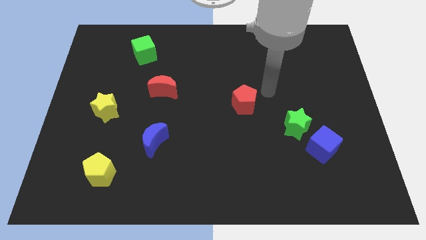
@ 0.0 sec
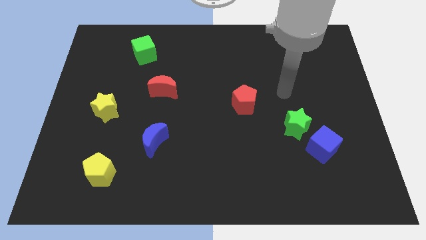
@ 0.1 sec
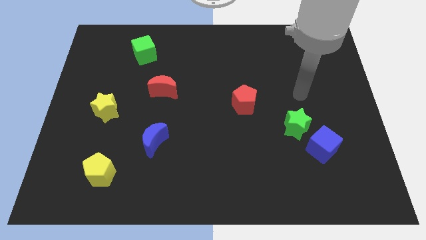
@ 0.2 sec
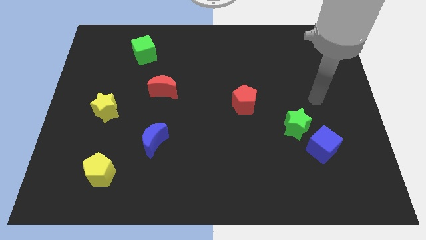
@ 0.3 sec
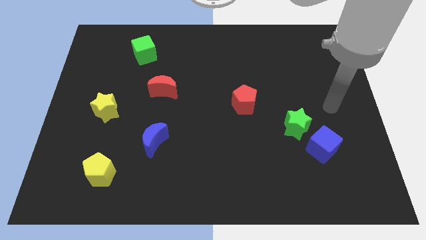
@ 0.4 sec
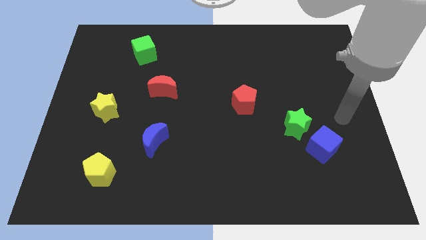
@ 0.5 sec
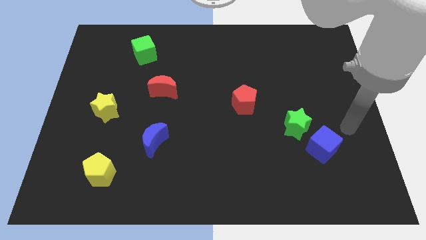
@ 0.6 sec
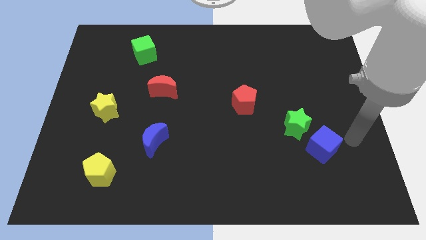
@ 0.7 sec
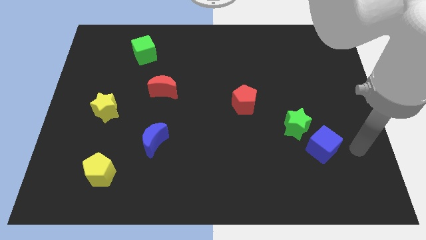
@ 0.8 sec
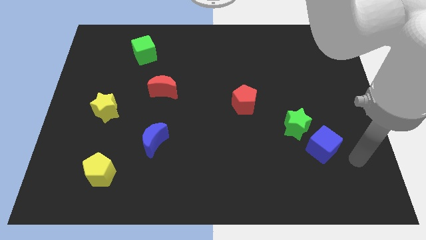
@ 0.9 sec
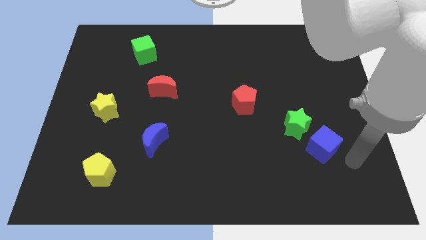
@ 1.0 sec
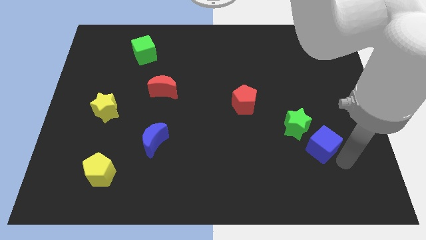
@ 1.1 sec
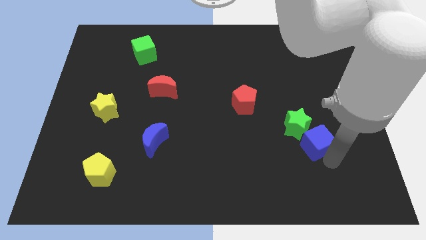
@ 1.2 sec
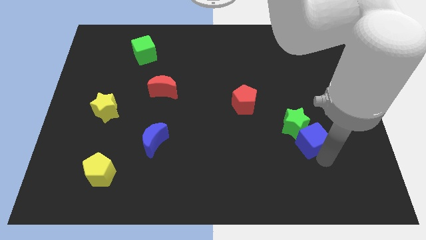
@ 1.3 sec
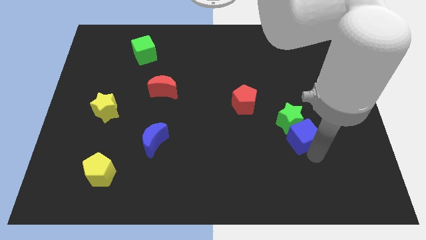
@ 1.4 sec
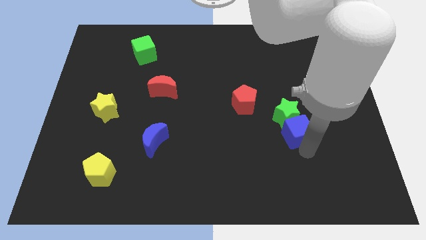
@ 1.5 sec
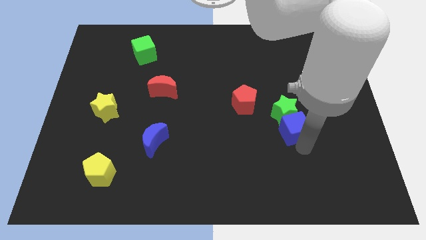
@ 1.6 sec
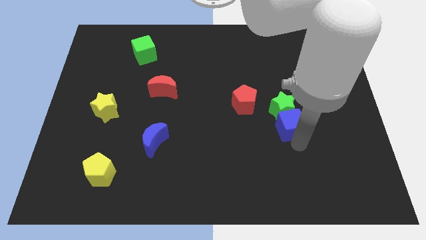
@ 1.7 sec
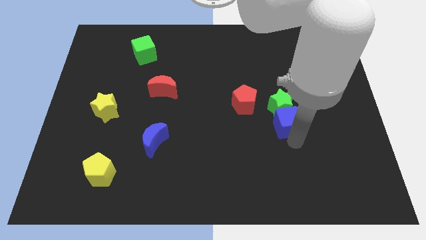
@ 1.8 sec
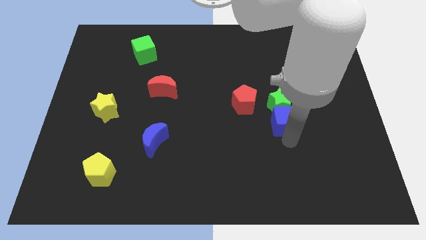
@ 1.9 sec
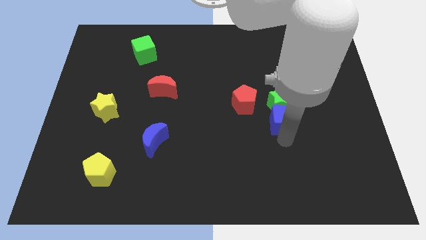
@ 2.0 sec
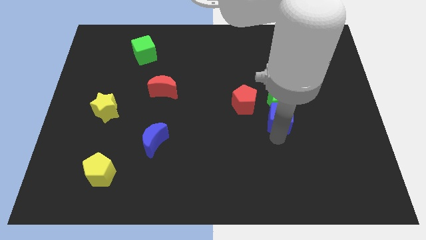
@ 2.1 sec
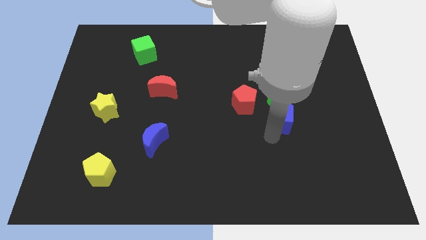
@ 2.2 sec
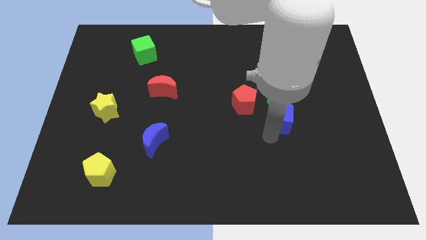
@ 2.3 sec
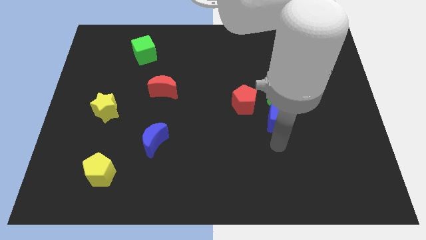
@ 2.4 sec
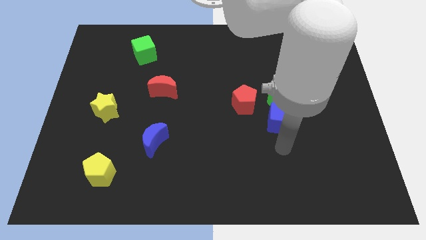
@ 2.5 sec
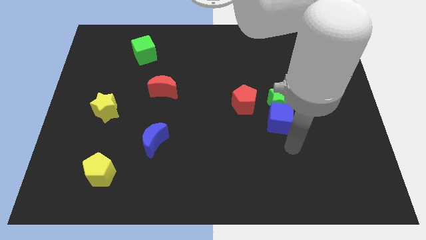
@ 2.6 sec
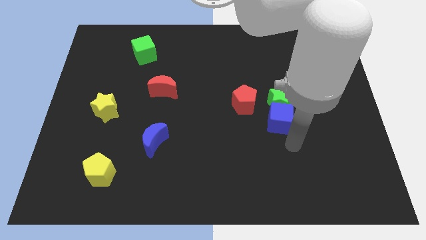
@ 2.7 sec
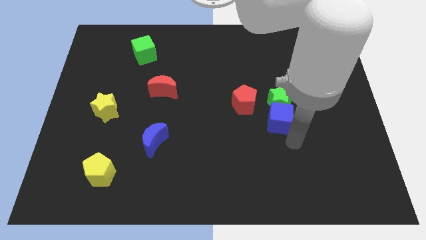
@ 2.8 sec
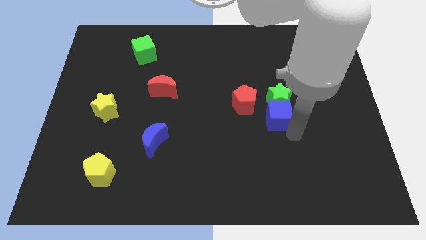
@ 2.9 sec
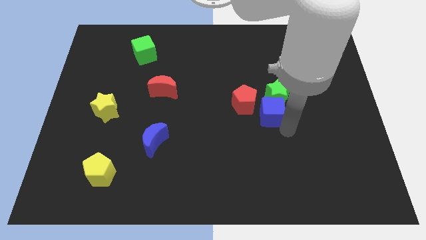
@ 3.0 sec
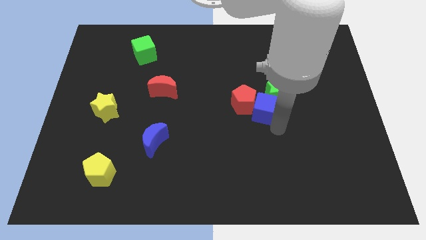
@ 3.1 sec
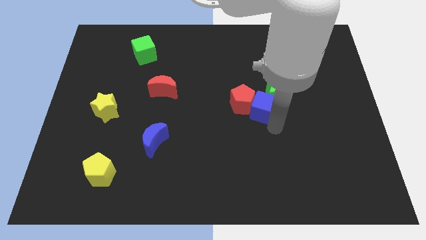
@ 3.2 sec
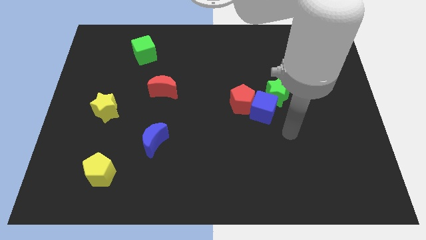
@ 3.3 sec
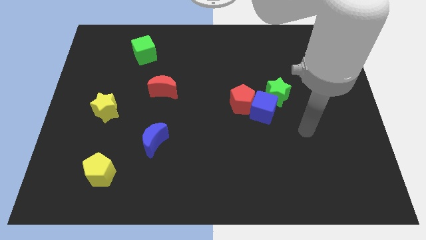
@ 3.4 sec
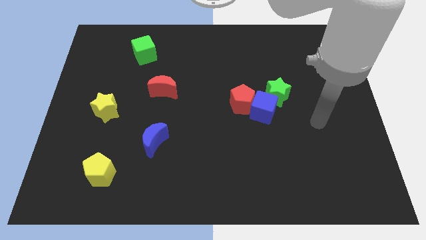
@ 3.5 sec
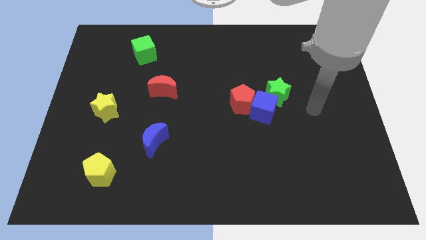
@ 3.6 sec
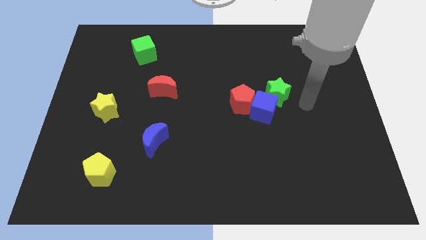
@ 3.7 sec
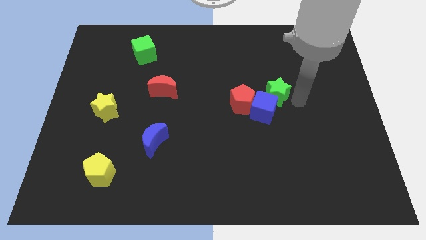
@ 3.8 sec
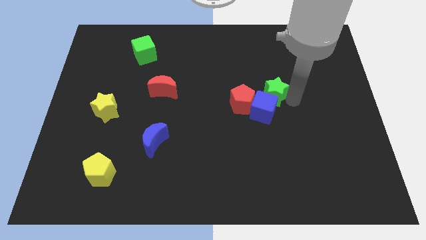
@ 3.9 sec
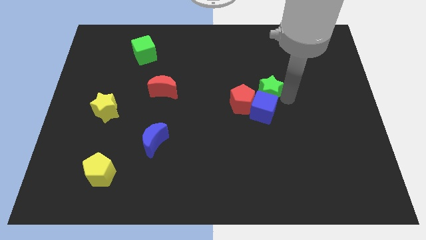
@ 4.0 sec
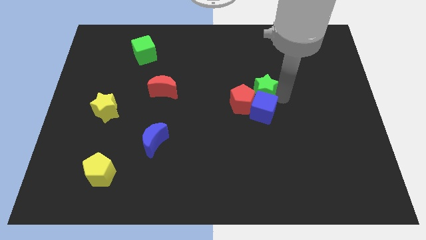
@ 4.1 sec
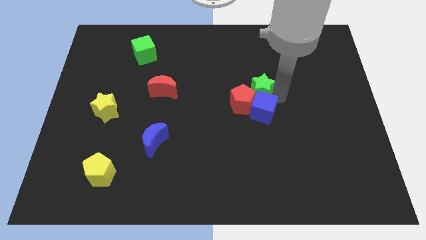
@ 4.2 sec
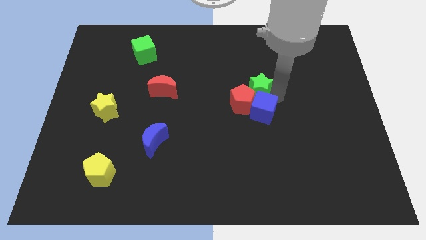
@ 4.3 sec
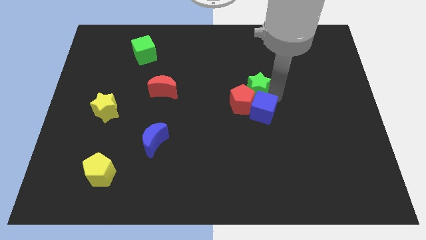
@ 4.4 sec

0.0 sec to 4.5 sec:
group up the blue cube red pentagon and green star at the right side of the red moon

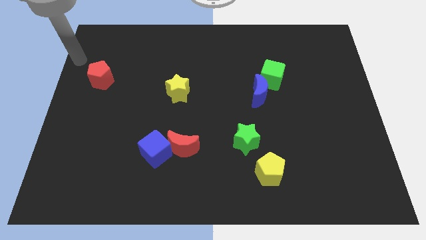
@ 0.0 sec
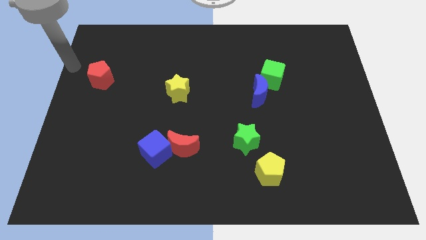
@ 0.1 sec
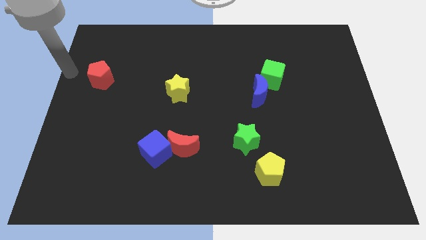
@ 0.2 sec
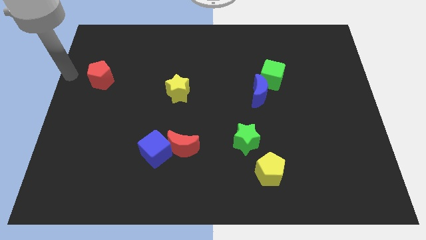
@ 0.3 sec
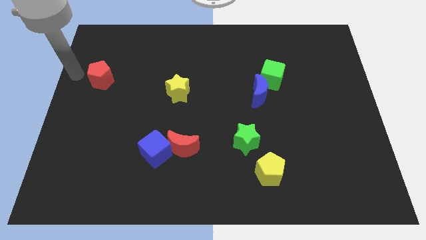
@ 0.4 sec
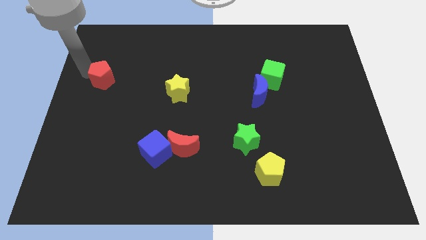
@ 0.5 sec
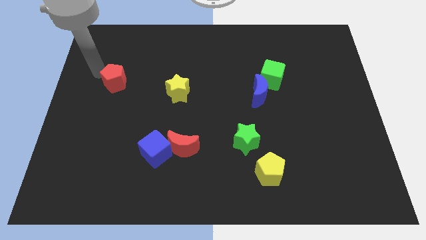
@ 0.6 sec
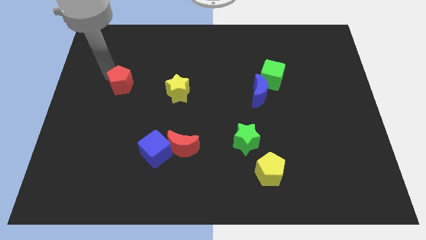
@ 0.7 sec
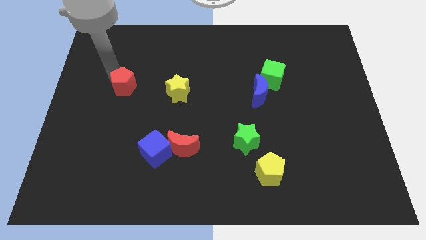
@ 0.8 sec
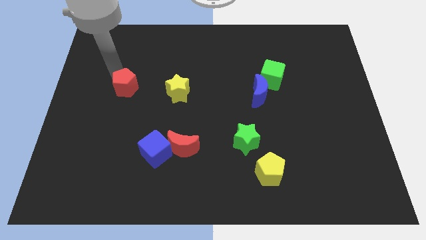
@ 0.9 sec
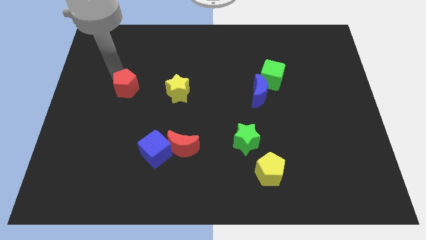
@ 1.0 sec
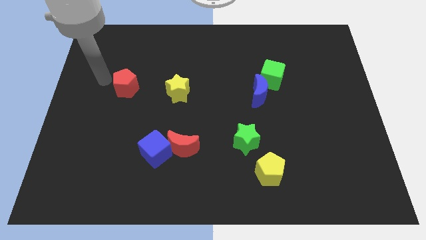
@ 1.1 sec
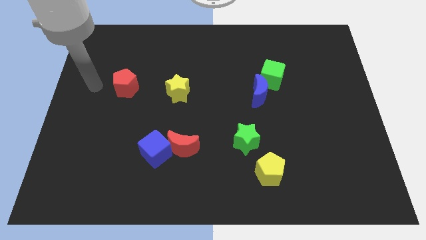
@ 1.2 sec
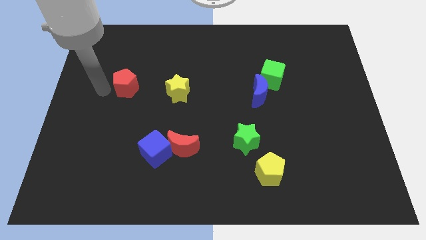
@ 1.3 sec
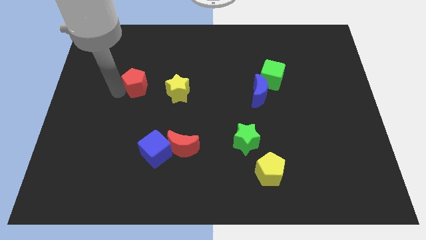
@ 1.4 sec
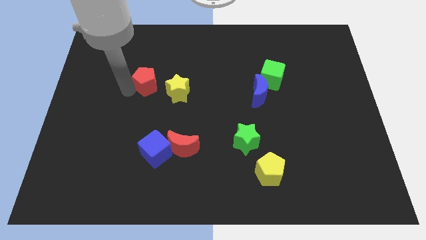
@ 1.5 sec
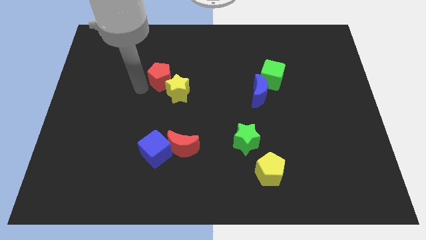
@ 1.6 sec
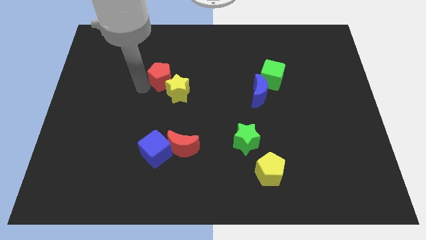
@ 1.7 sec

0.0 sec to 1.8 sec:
place the red pentagon at the top left side of yellow star

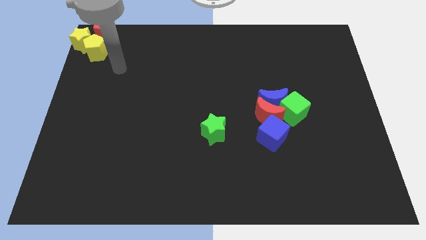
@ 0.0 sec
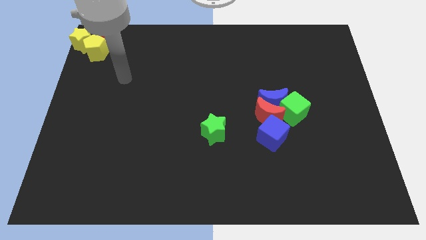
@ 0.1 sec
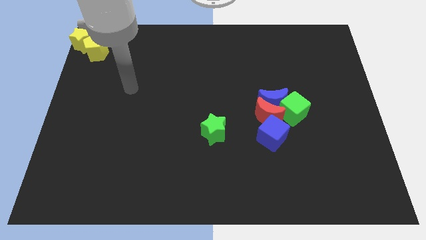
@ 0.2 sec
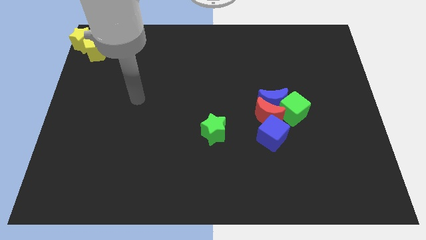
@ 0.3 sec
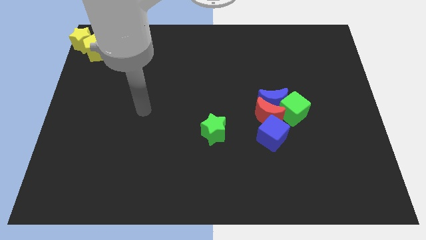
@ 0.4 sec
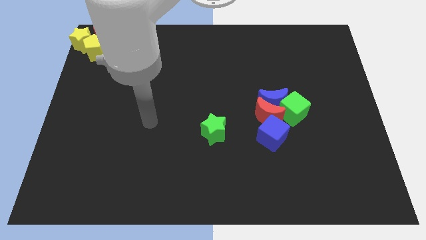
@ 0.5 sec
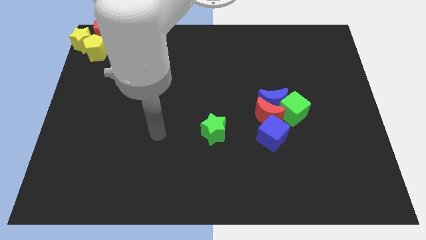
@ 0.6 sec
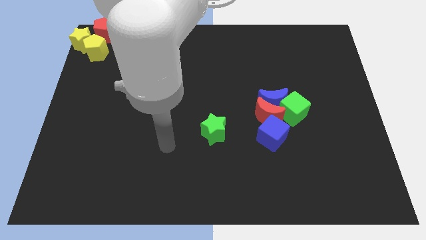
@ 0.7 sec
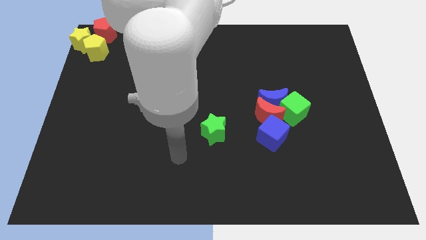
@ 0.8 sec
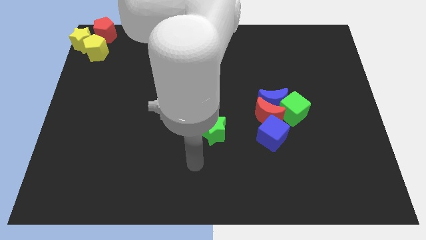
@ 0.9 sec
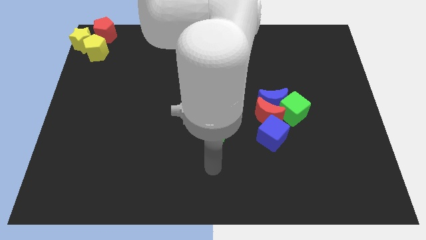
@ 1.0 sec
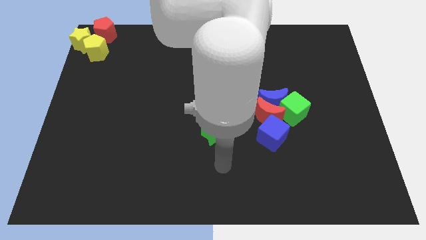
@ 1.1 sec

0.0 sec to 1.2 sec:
move your arm towards the bottom of the green star

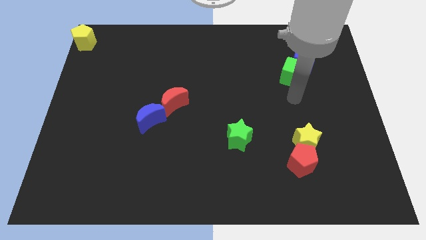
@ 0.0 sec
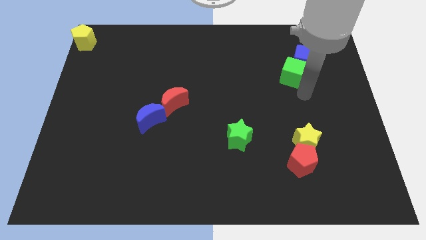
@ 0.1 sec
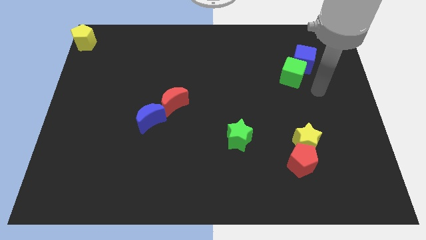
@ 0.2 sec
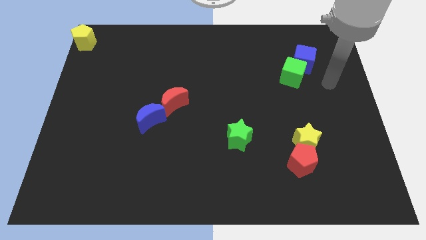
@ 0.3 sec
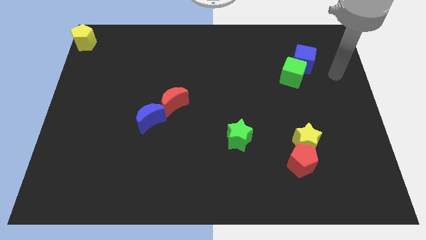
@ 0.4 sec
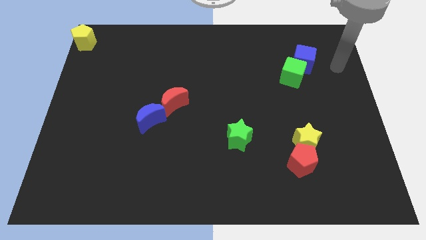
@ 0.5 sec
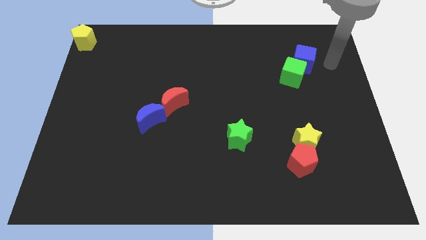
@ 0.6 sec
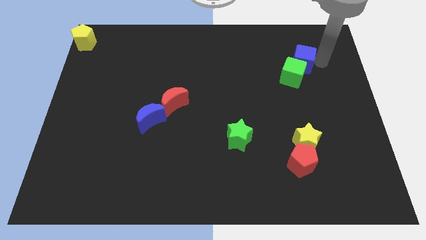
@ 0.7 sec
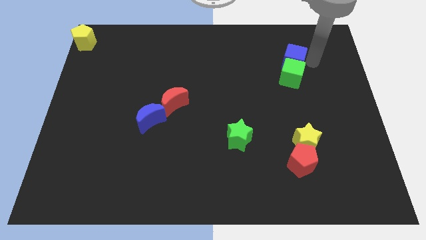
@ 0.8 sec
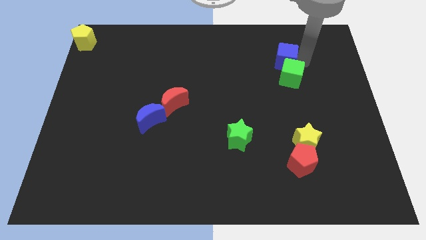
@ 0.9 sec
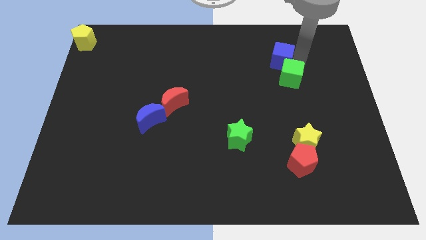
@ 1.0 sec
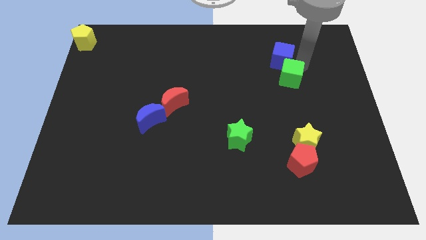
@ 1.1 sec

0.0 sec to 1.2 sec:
push blue cube to the left
